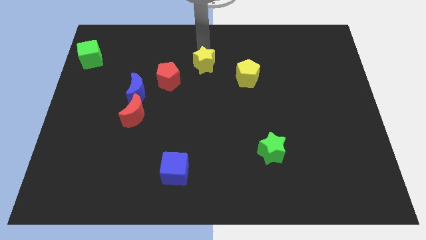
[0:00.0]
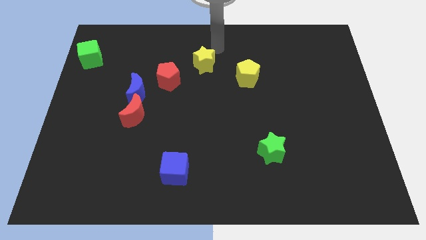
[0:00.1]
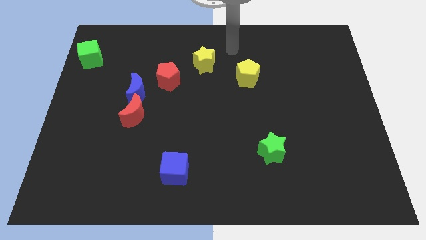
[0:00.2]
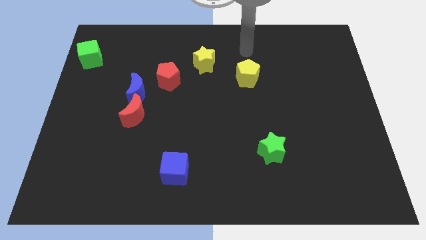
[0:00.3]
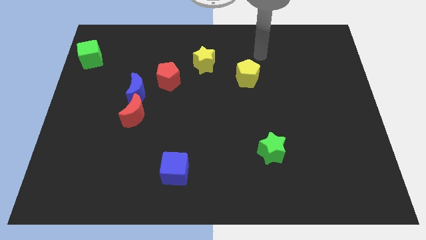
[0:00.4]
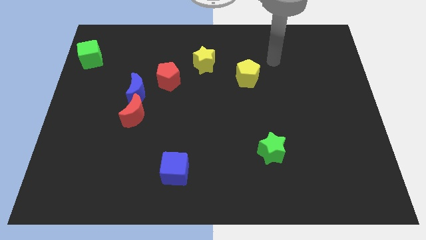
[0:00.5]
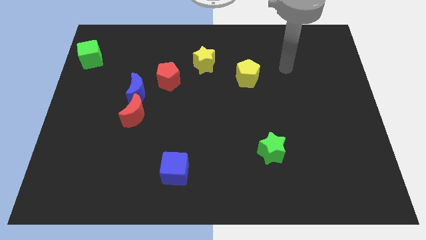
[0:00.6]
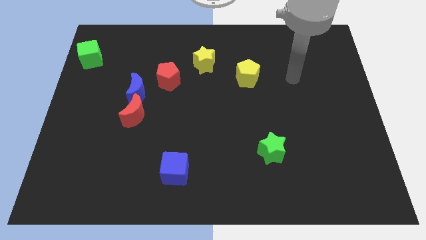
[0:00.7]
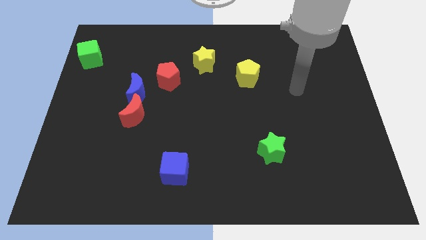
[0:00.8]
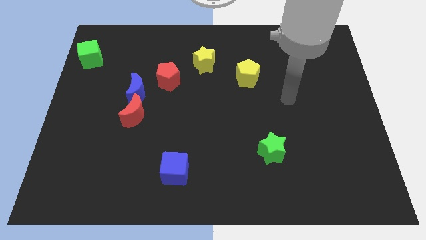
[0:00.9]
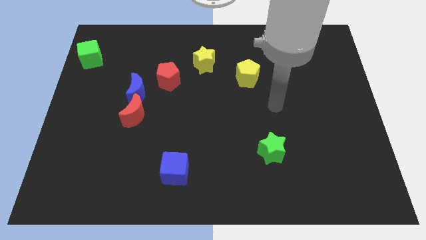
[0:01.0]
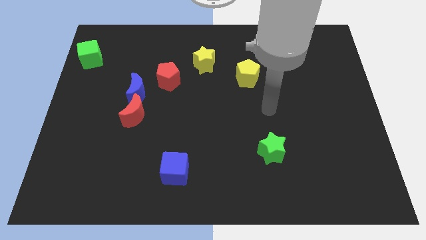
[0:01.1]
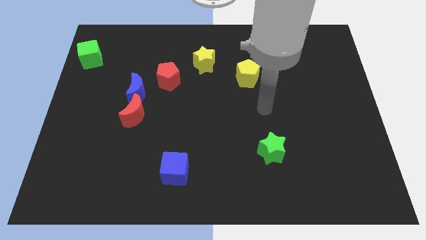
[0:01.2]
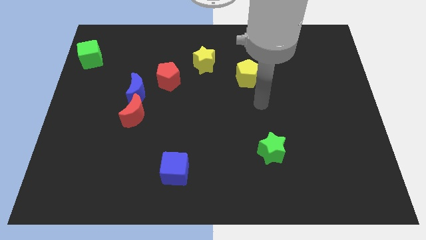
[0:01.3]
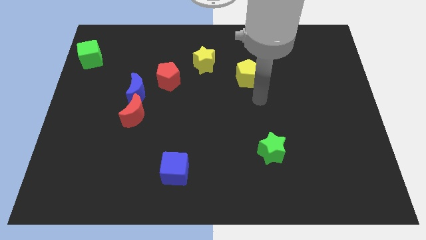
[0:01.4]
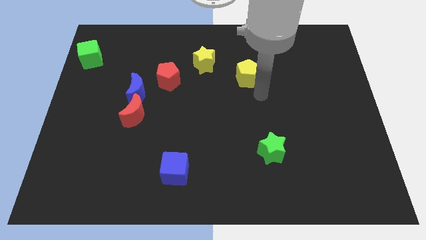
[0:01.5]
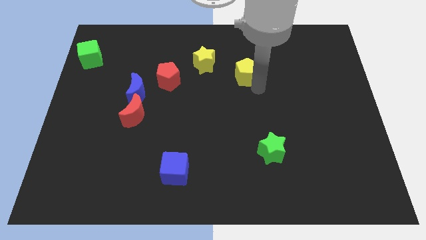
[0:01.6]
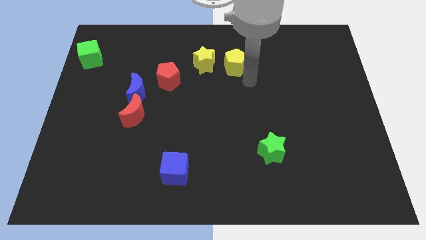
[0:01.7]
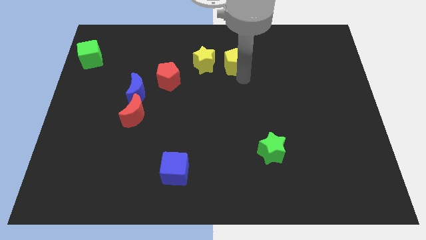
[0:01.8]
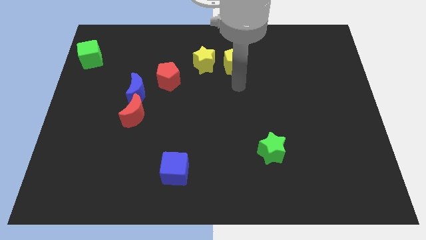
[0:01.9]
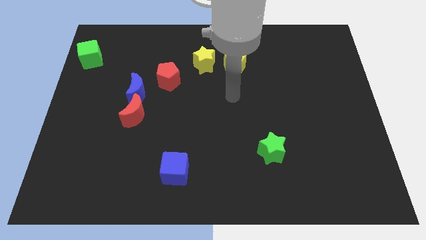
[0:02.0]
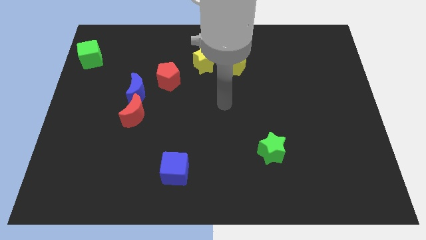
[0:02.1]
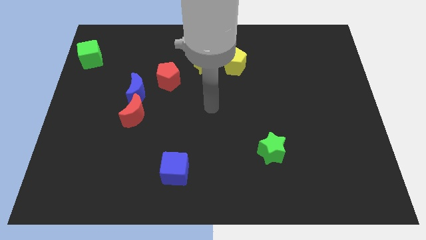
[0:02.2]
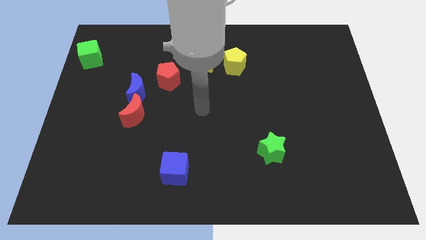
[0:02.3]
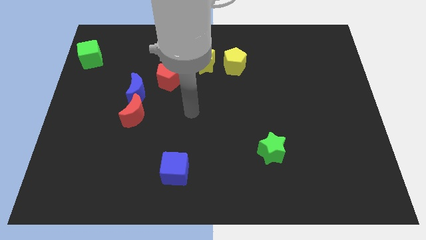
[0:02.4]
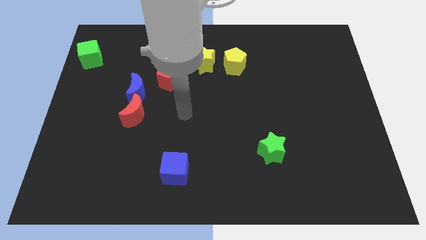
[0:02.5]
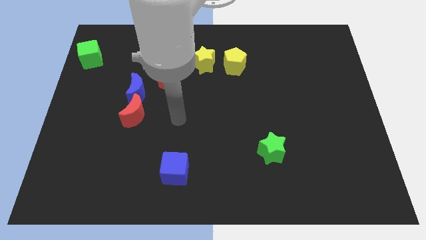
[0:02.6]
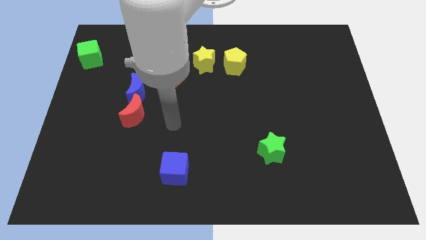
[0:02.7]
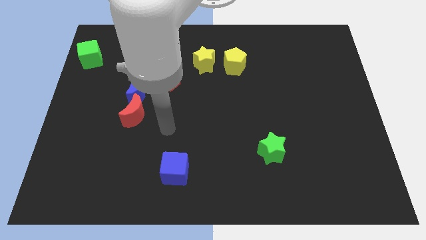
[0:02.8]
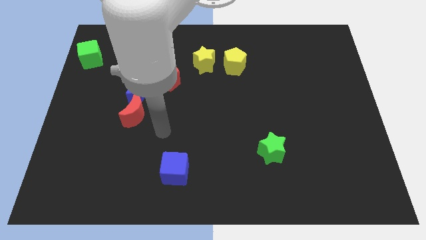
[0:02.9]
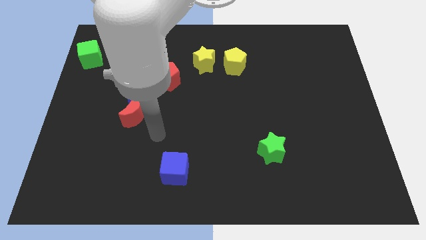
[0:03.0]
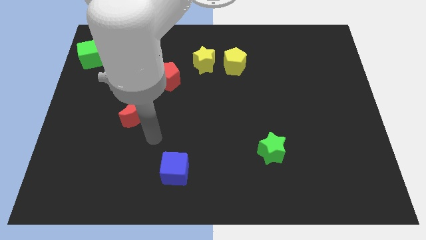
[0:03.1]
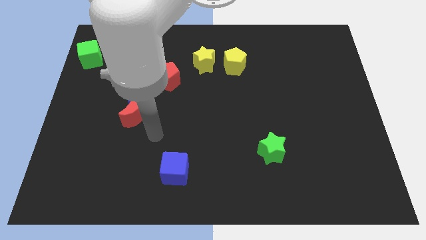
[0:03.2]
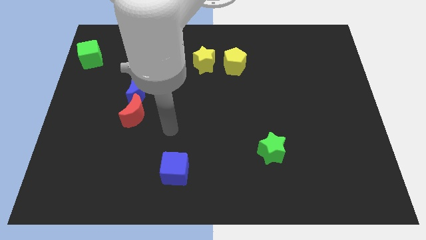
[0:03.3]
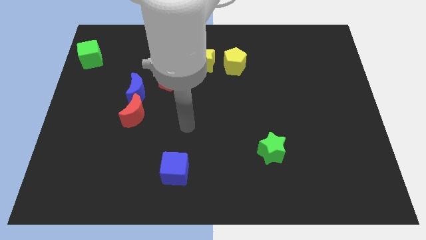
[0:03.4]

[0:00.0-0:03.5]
place yellow pentagon to the right of yellow star

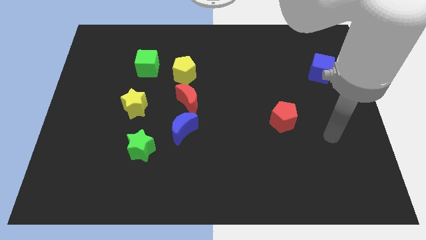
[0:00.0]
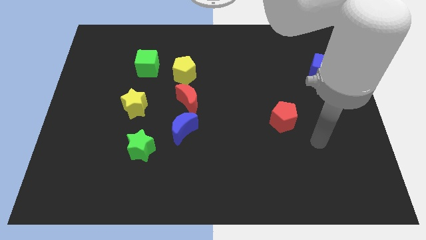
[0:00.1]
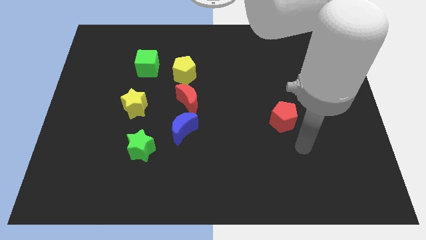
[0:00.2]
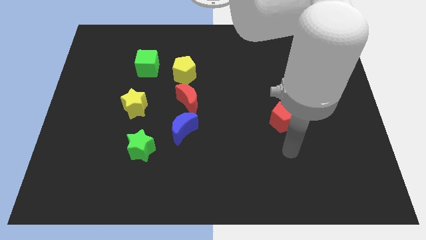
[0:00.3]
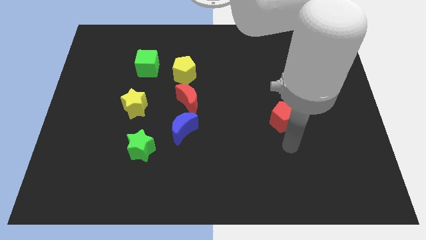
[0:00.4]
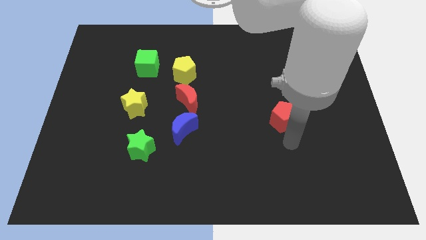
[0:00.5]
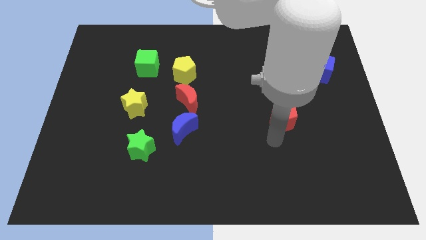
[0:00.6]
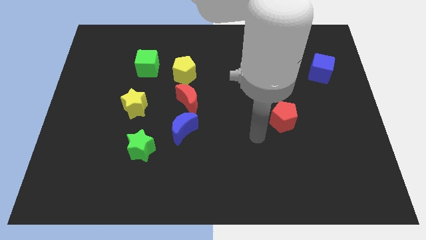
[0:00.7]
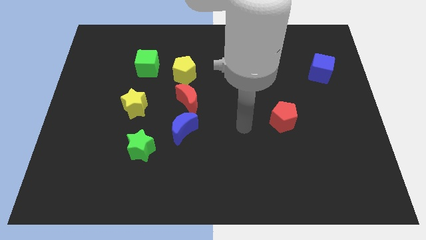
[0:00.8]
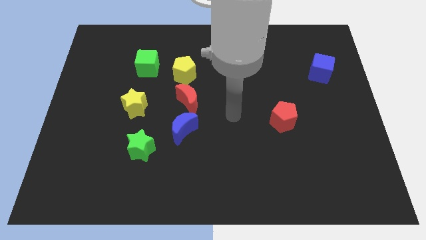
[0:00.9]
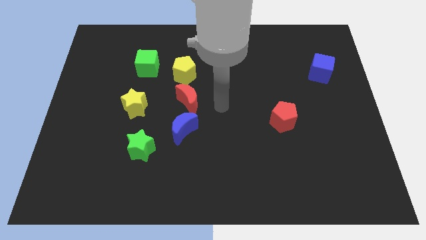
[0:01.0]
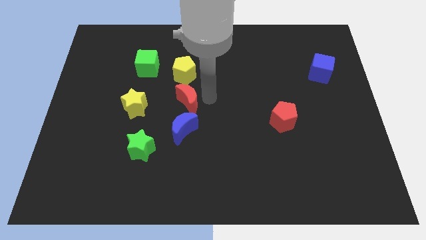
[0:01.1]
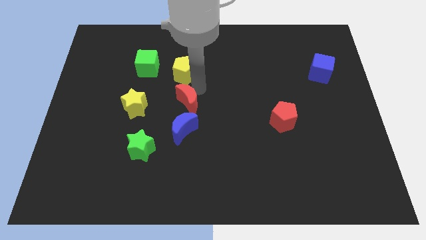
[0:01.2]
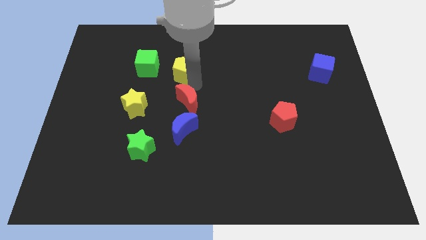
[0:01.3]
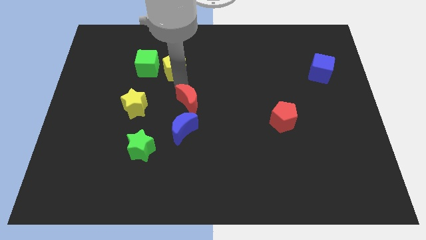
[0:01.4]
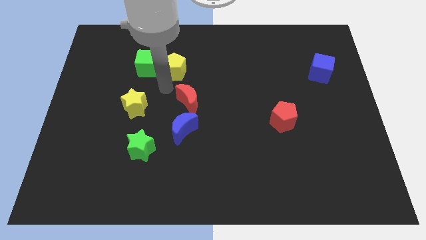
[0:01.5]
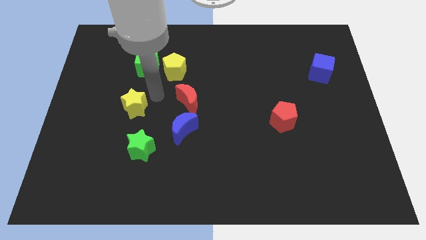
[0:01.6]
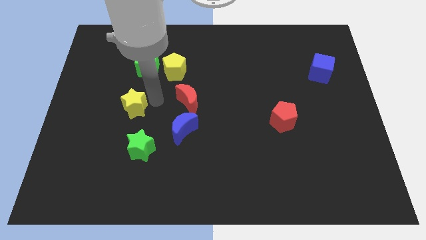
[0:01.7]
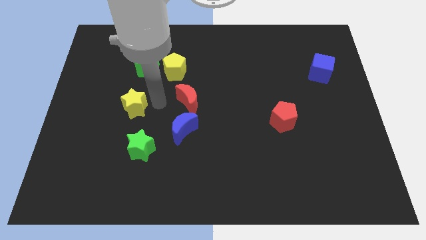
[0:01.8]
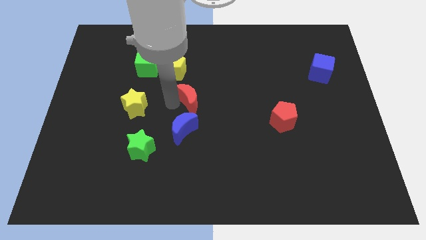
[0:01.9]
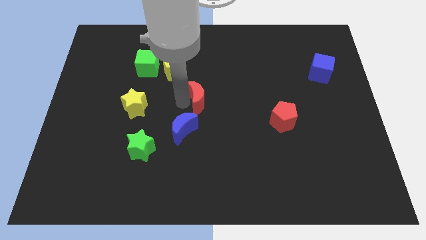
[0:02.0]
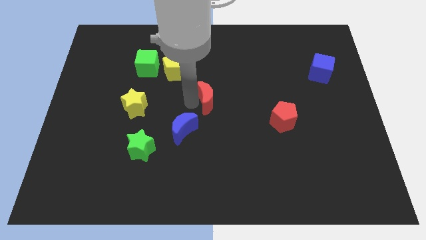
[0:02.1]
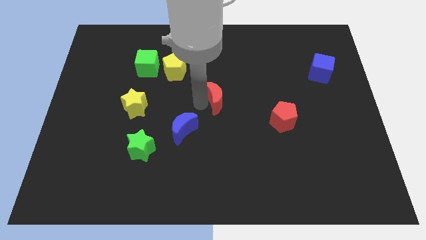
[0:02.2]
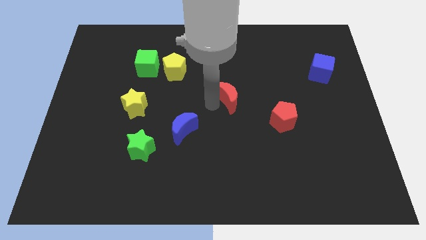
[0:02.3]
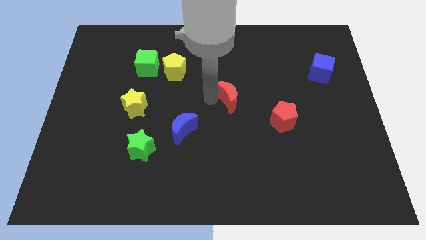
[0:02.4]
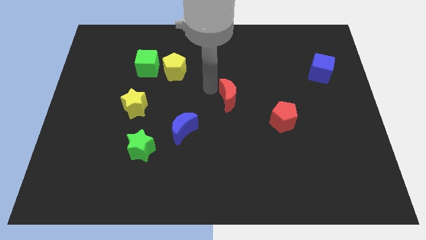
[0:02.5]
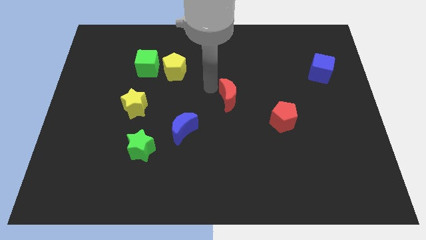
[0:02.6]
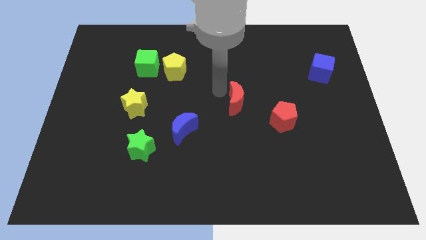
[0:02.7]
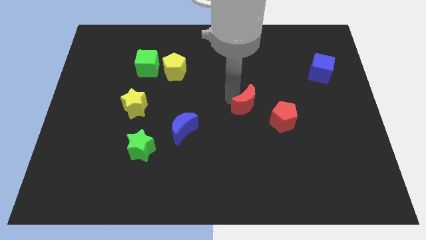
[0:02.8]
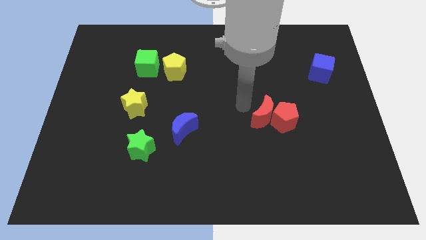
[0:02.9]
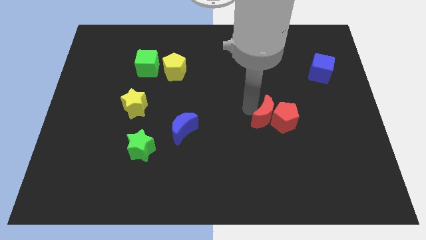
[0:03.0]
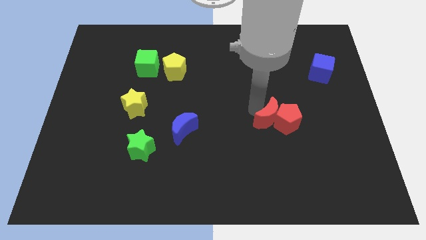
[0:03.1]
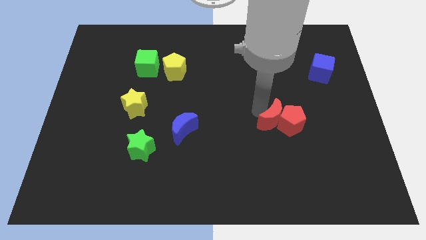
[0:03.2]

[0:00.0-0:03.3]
push red moon into the red pentagon

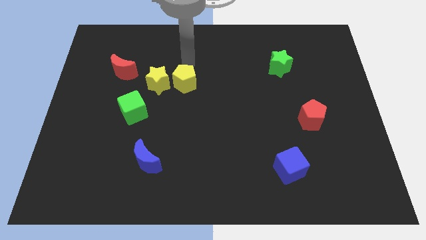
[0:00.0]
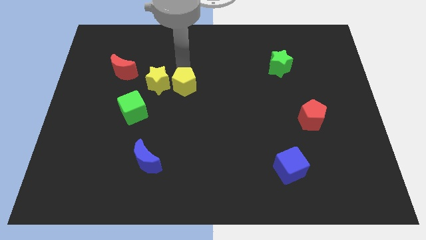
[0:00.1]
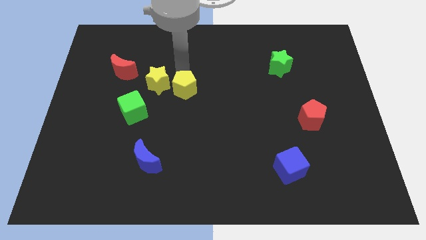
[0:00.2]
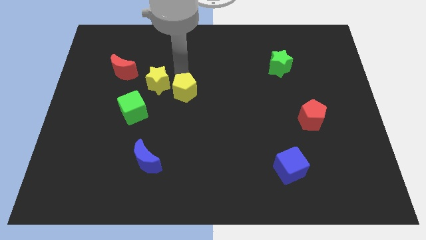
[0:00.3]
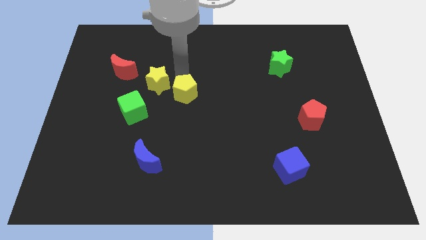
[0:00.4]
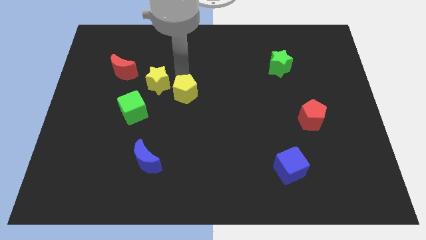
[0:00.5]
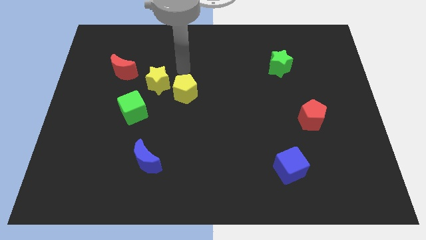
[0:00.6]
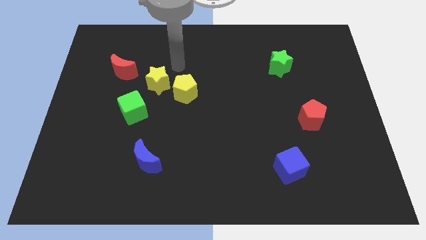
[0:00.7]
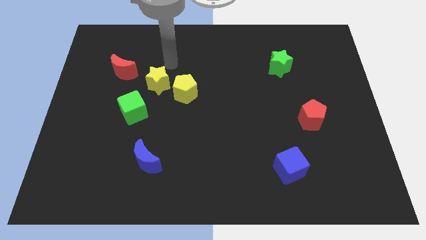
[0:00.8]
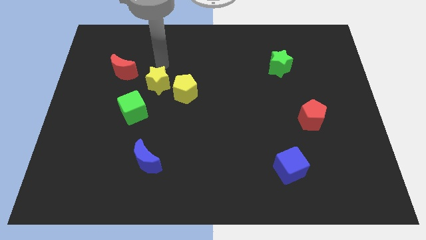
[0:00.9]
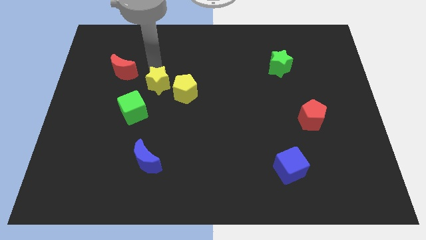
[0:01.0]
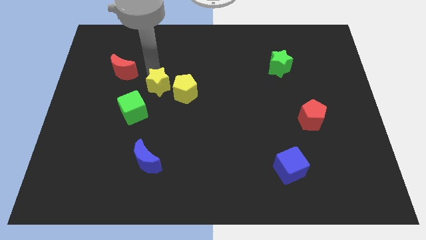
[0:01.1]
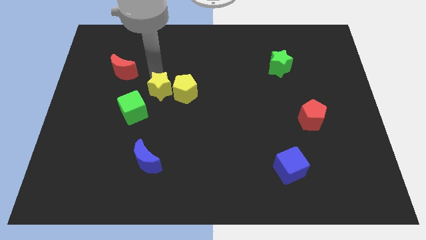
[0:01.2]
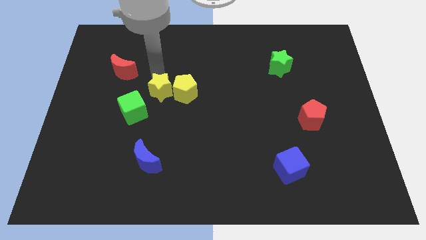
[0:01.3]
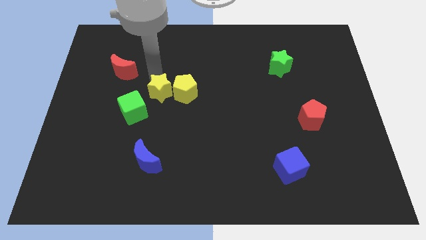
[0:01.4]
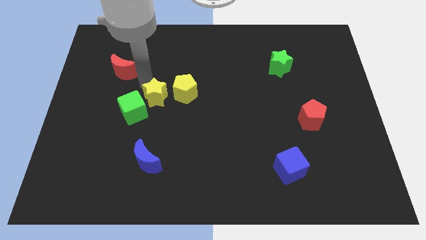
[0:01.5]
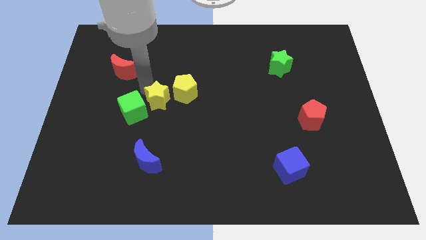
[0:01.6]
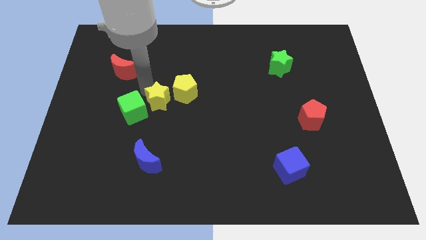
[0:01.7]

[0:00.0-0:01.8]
place the yellow blocks adjacent to green cube

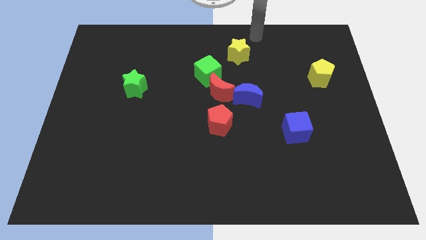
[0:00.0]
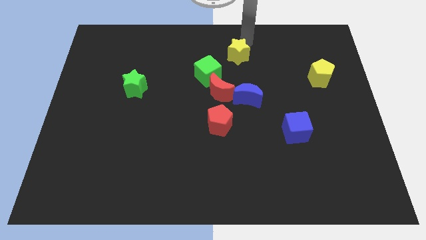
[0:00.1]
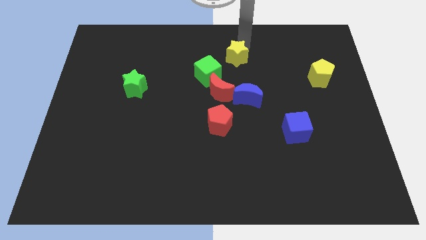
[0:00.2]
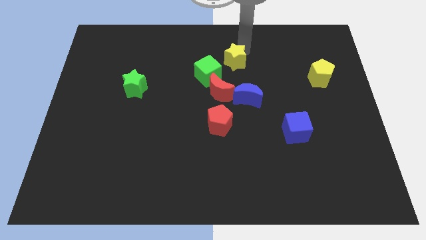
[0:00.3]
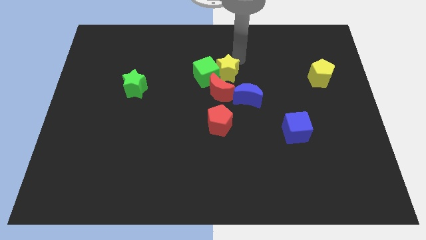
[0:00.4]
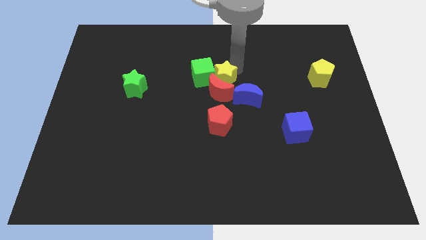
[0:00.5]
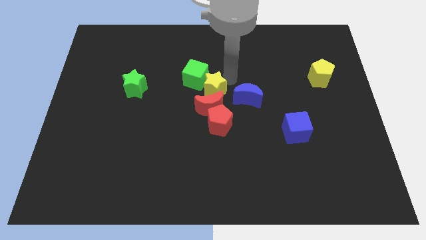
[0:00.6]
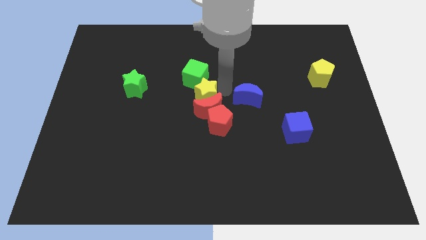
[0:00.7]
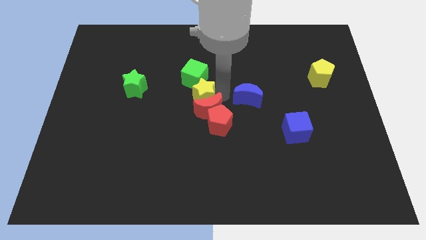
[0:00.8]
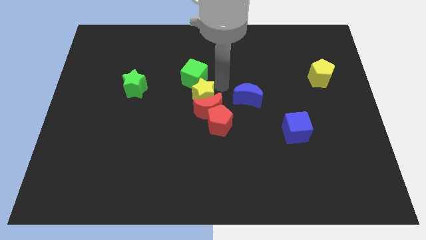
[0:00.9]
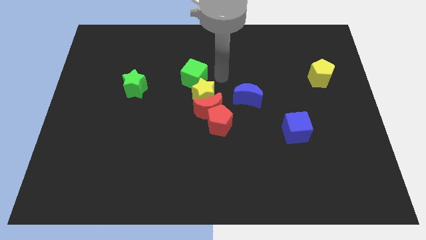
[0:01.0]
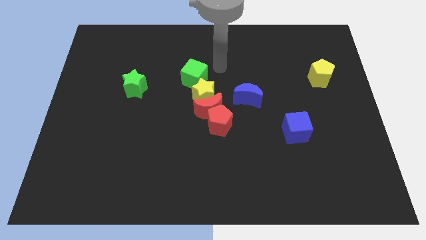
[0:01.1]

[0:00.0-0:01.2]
place the yellow star in between green cube and red crescent
